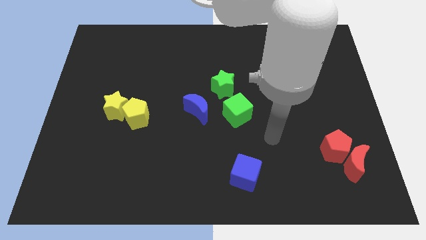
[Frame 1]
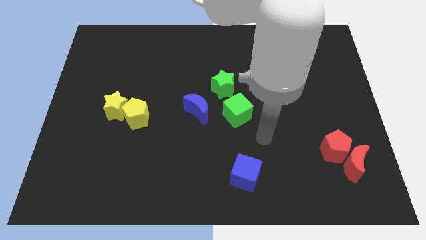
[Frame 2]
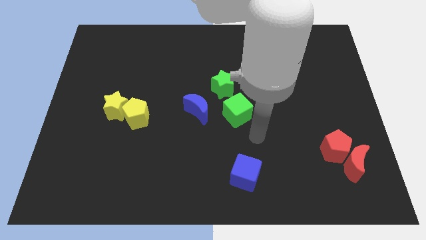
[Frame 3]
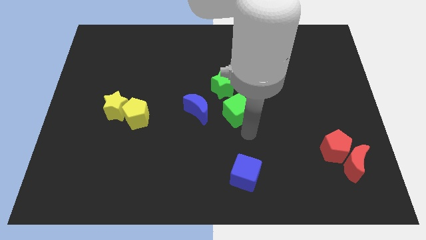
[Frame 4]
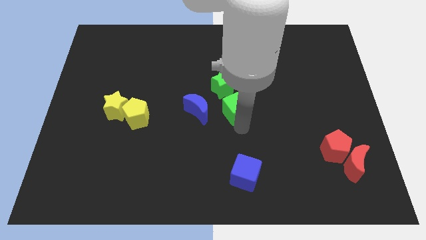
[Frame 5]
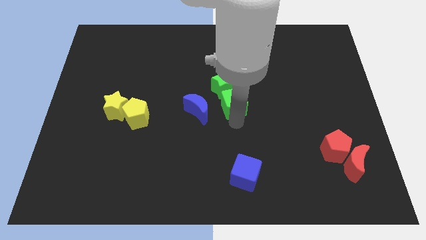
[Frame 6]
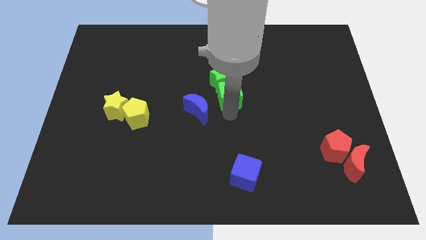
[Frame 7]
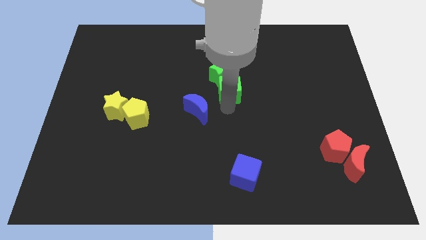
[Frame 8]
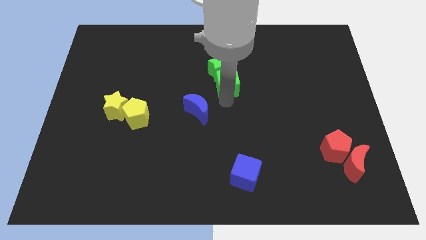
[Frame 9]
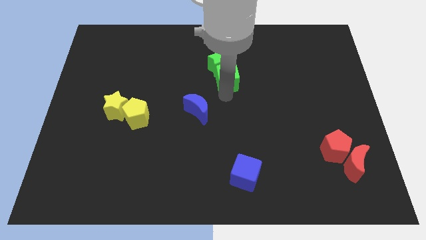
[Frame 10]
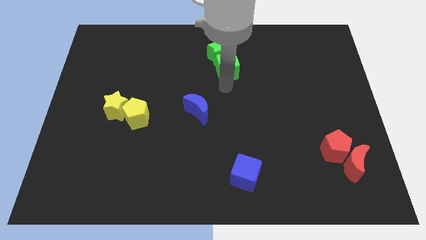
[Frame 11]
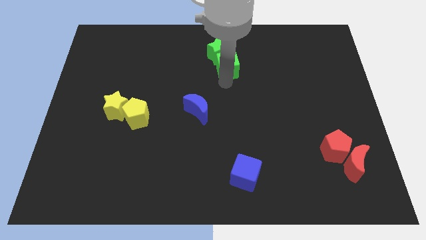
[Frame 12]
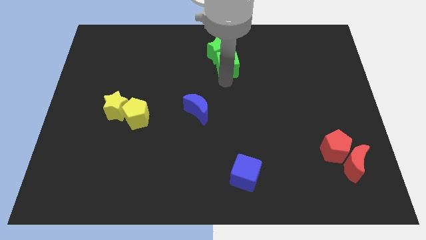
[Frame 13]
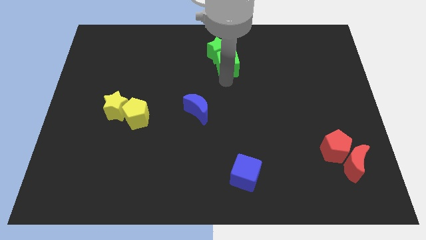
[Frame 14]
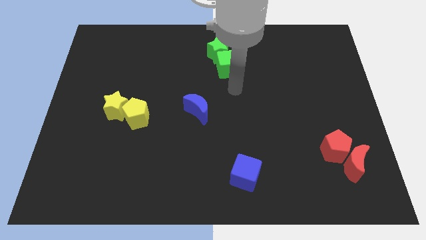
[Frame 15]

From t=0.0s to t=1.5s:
move green star and green cube to the top center of the board

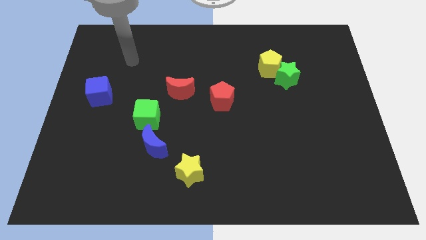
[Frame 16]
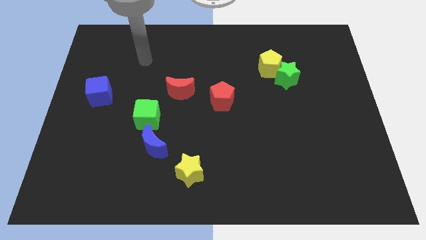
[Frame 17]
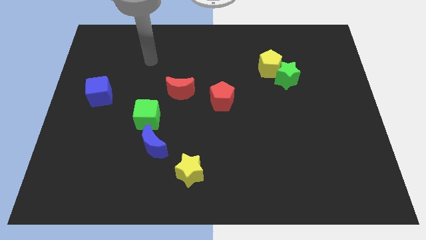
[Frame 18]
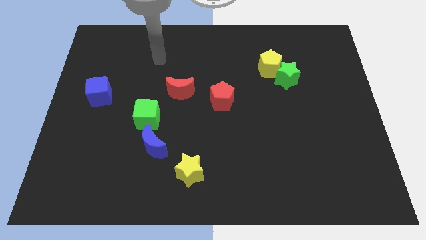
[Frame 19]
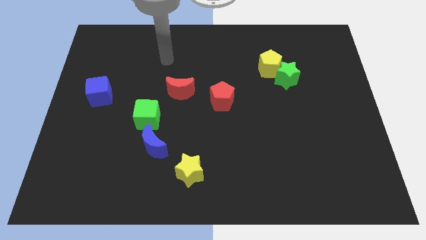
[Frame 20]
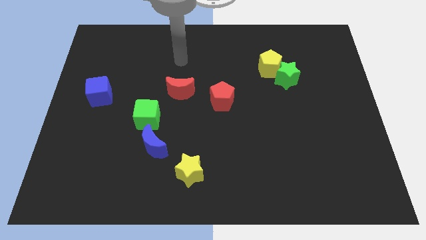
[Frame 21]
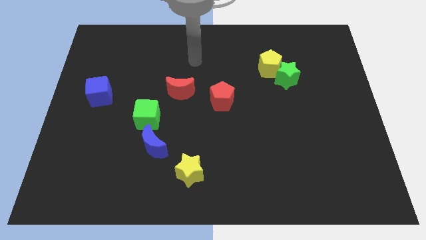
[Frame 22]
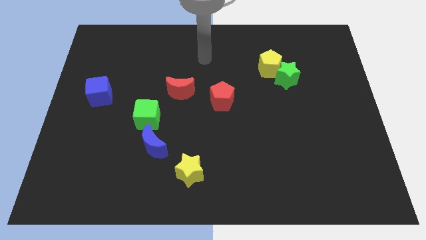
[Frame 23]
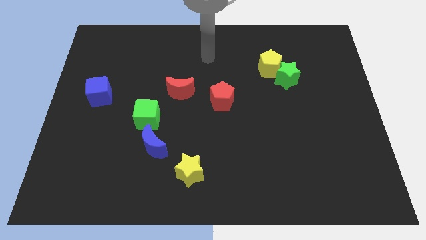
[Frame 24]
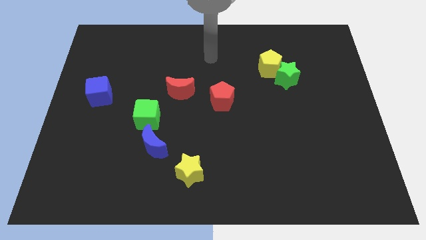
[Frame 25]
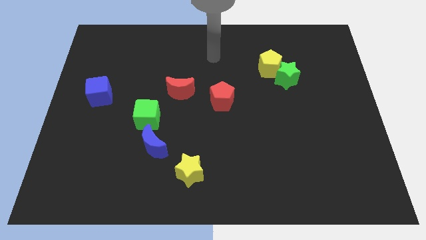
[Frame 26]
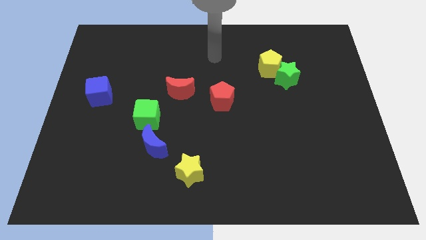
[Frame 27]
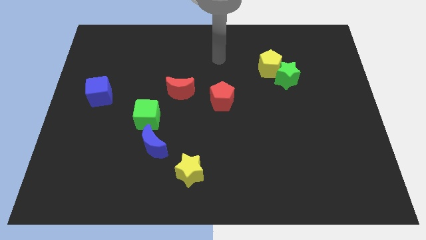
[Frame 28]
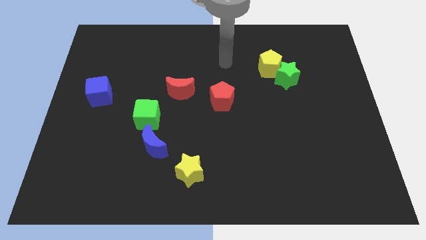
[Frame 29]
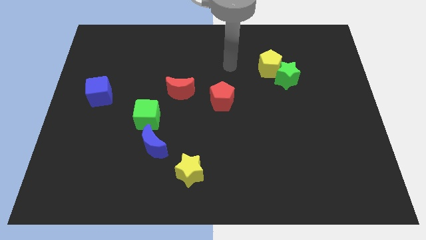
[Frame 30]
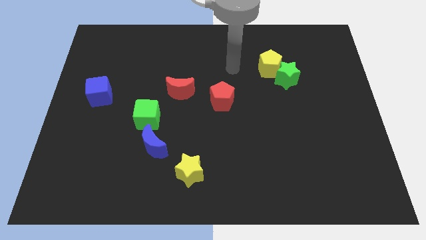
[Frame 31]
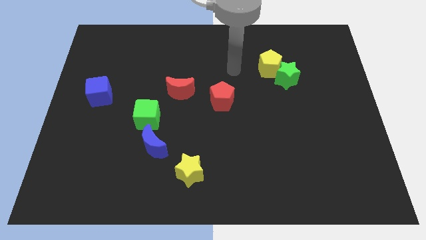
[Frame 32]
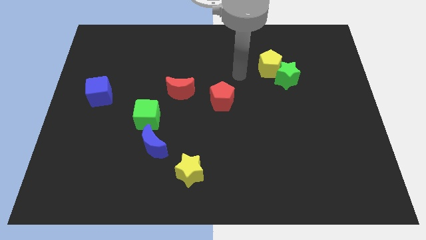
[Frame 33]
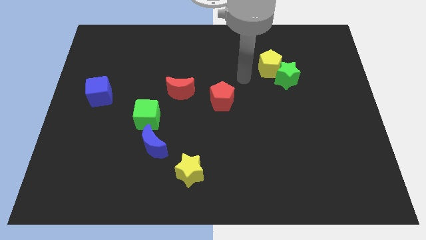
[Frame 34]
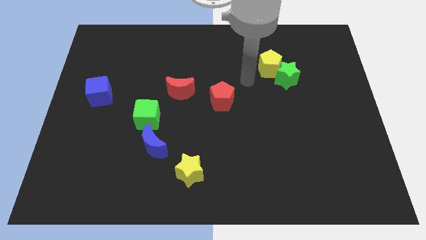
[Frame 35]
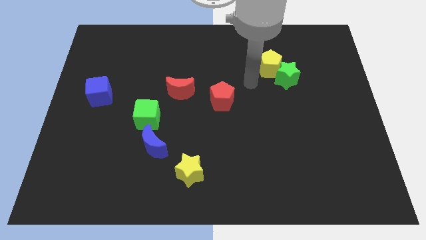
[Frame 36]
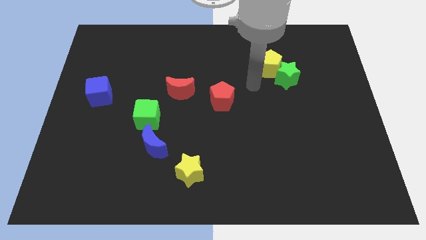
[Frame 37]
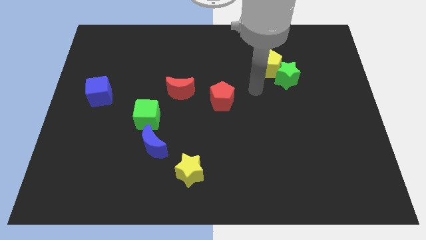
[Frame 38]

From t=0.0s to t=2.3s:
move your arm to the bottom of yellow pentagon

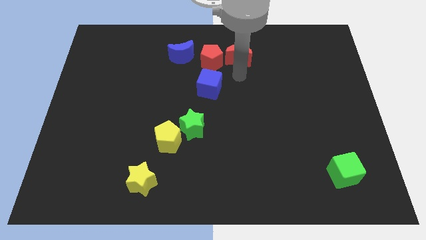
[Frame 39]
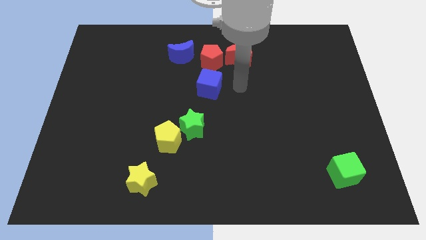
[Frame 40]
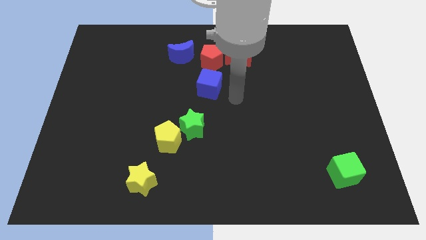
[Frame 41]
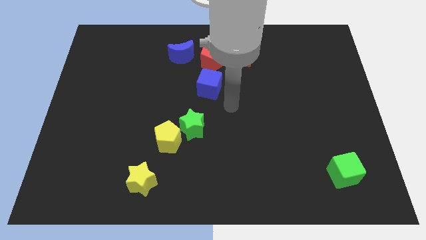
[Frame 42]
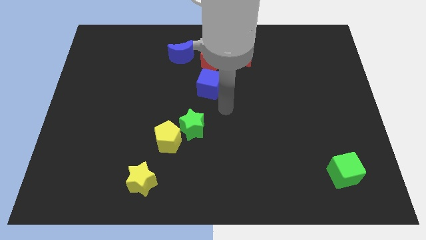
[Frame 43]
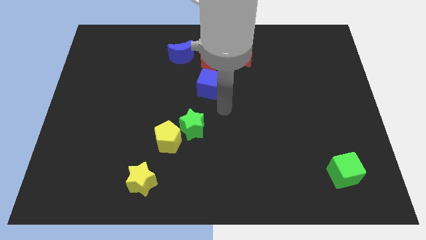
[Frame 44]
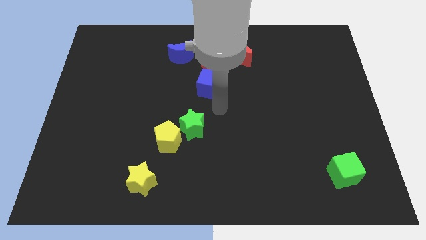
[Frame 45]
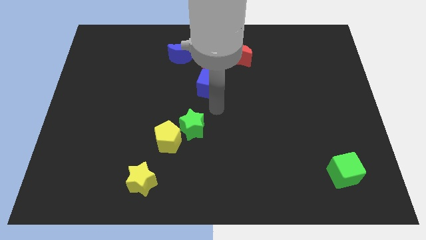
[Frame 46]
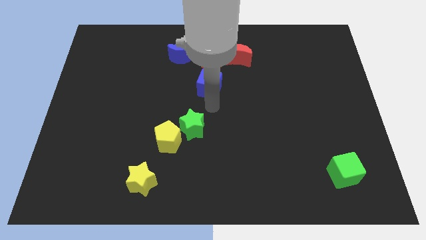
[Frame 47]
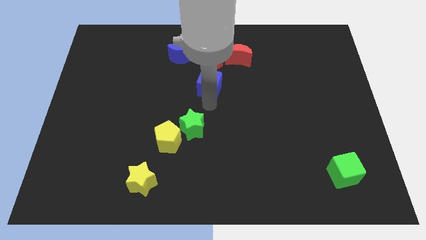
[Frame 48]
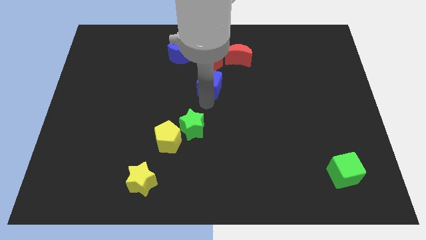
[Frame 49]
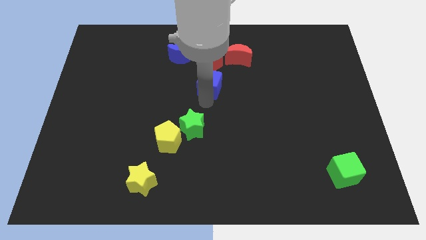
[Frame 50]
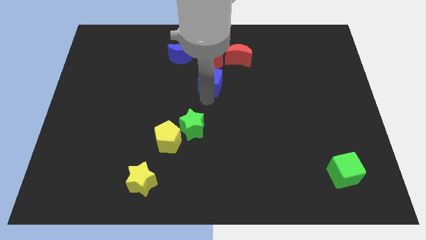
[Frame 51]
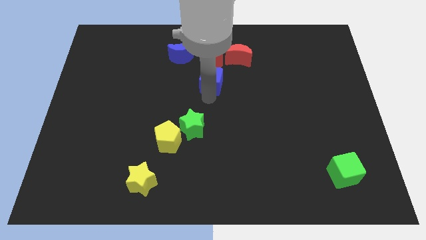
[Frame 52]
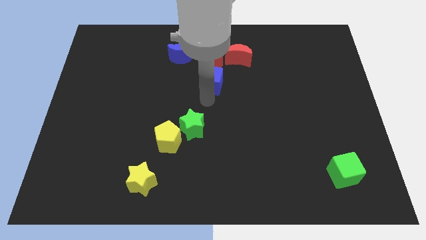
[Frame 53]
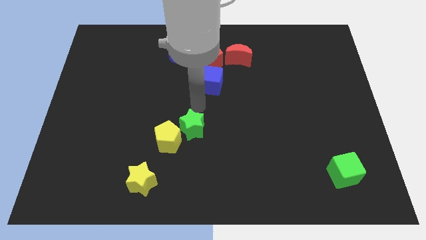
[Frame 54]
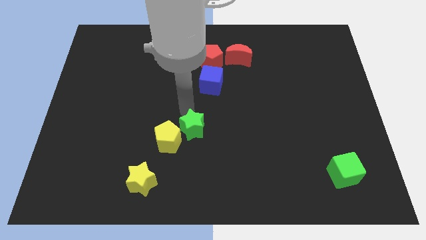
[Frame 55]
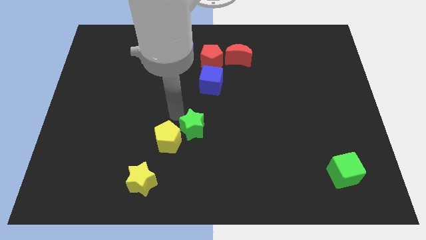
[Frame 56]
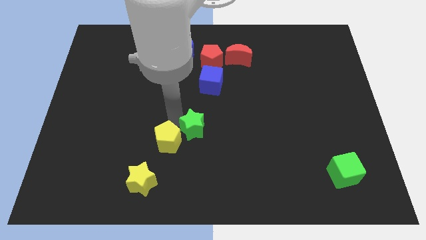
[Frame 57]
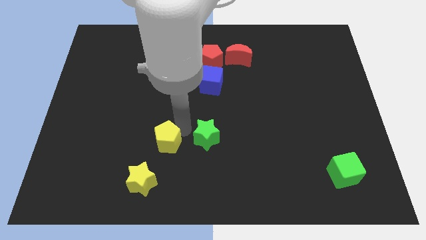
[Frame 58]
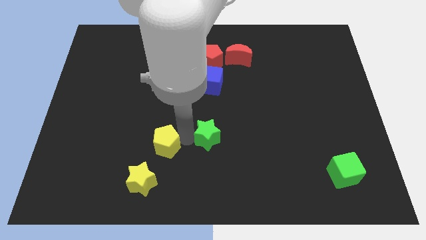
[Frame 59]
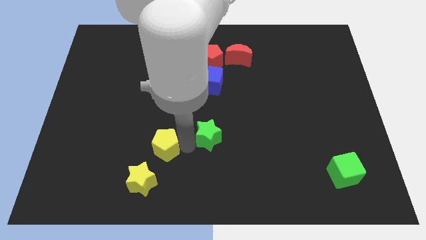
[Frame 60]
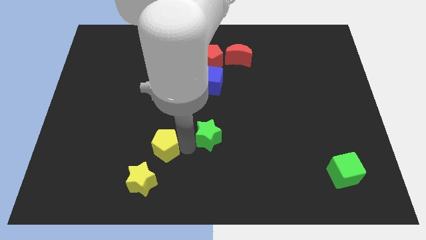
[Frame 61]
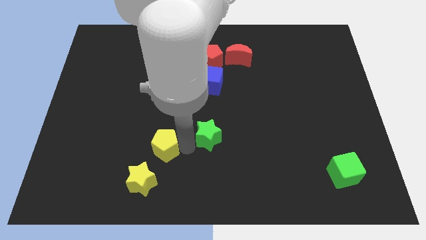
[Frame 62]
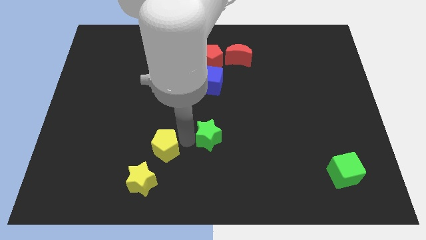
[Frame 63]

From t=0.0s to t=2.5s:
separate the yellow pentagon and green star

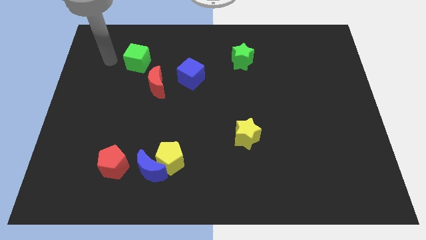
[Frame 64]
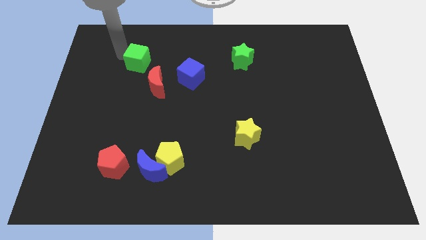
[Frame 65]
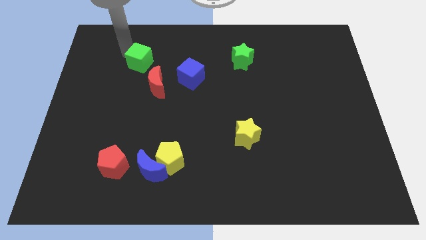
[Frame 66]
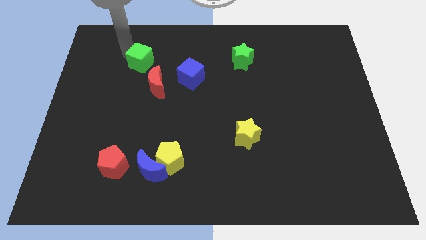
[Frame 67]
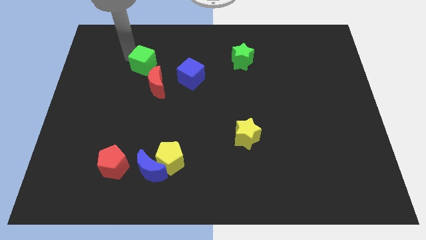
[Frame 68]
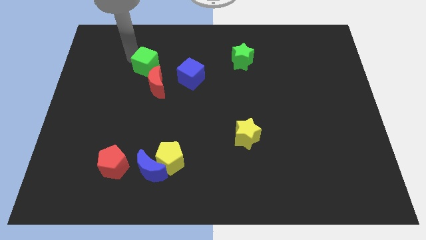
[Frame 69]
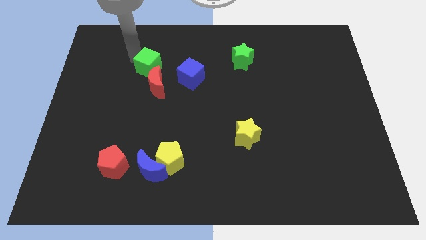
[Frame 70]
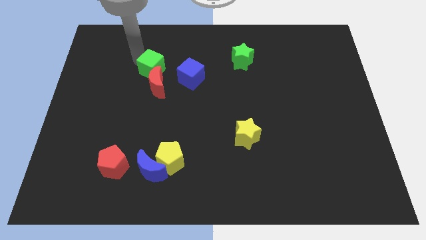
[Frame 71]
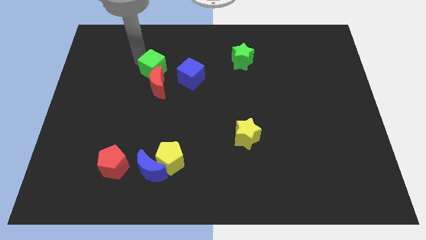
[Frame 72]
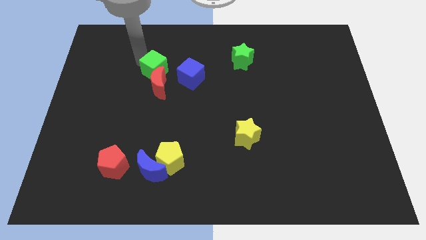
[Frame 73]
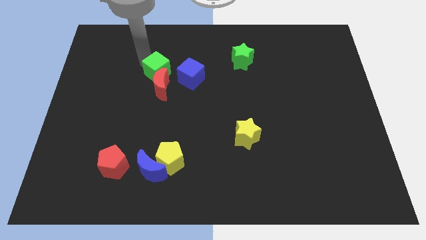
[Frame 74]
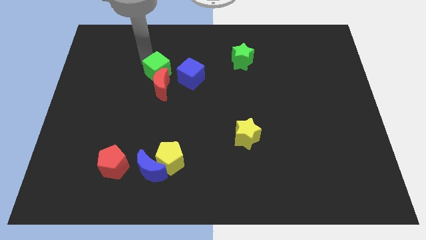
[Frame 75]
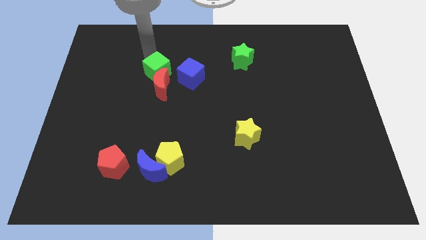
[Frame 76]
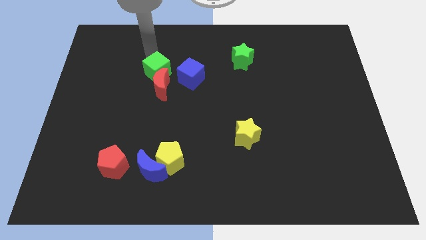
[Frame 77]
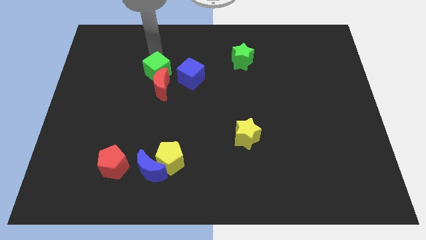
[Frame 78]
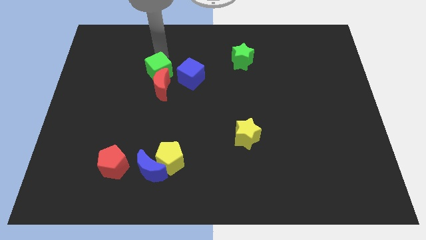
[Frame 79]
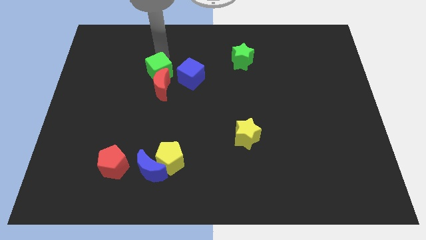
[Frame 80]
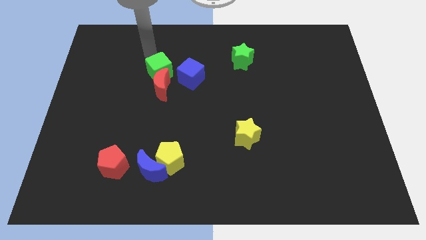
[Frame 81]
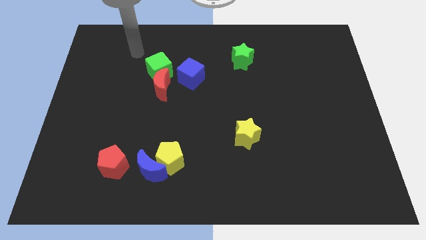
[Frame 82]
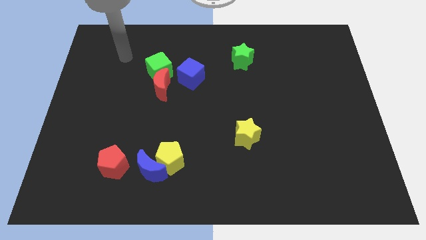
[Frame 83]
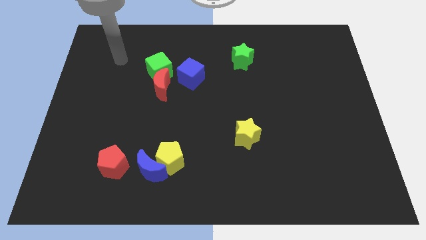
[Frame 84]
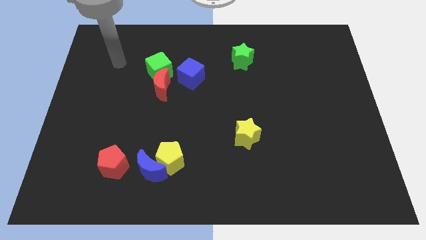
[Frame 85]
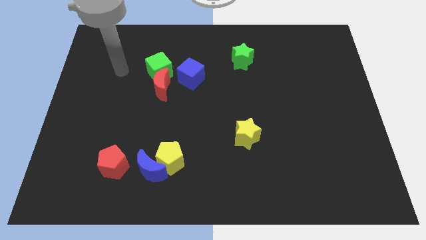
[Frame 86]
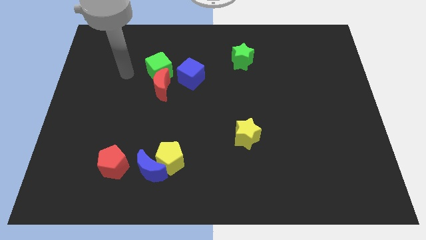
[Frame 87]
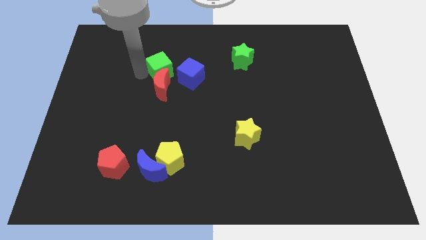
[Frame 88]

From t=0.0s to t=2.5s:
push the green cube into the red moon

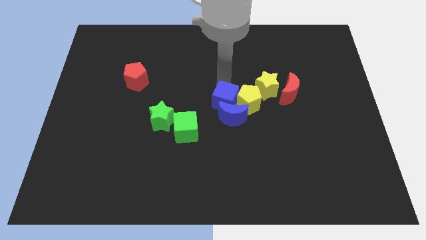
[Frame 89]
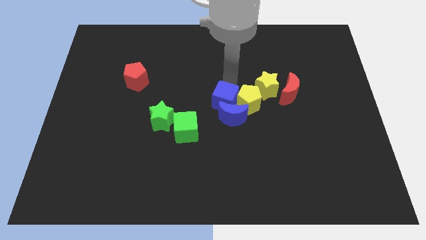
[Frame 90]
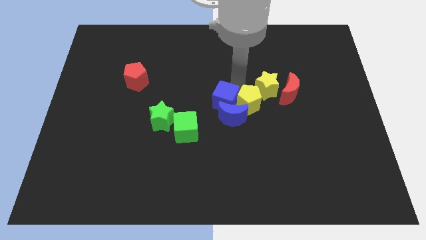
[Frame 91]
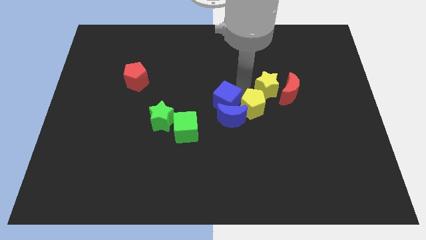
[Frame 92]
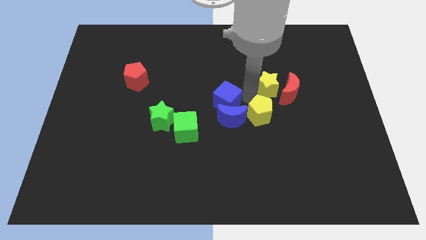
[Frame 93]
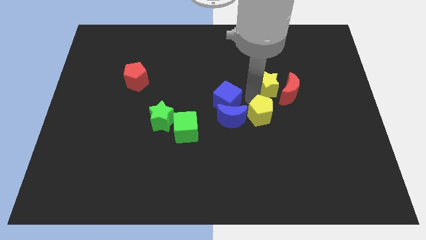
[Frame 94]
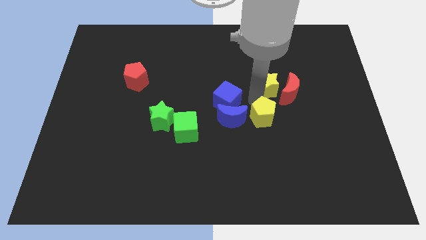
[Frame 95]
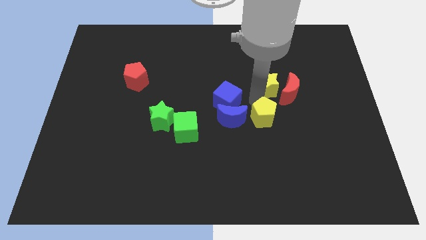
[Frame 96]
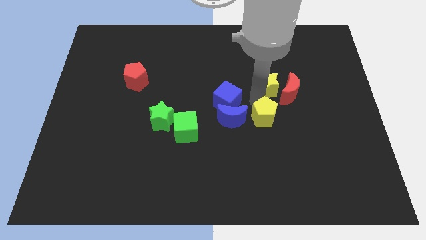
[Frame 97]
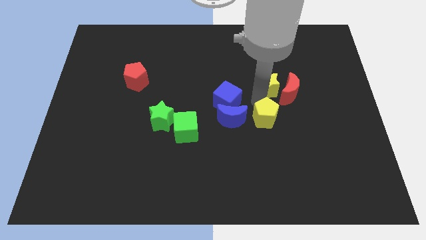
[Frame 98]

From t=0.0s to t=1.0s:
push the yellow pentagon to the right side of the blue moon
